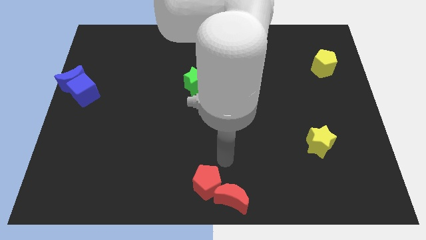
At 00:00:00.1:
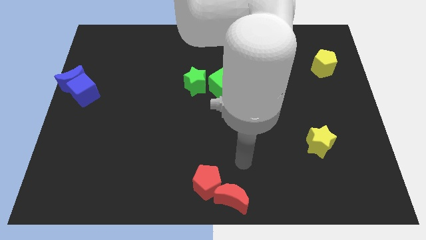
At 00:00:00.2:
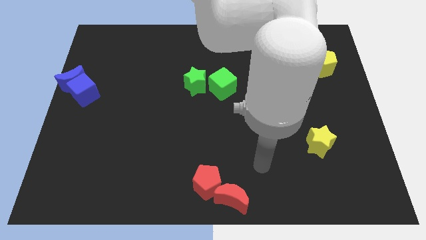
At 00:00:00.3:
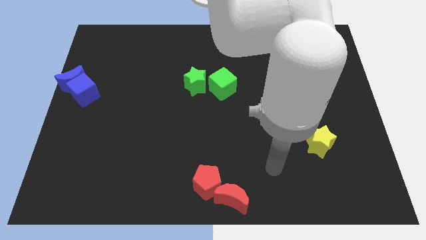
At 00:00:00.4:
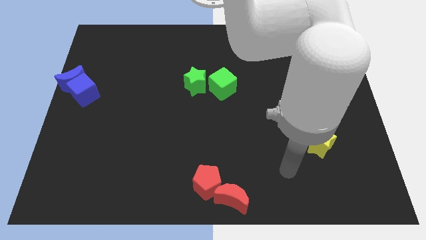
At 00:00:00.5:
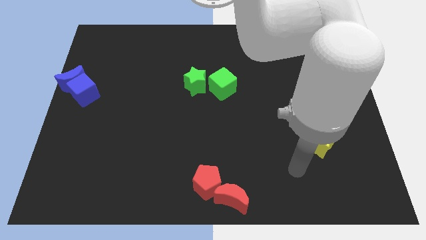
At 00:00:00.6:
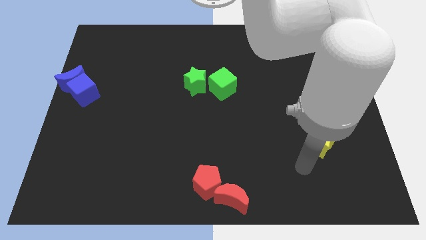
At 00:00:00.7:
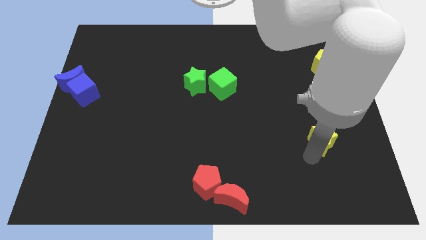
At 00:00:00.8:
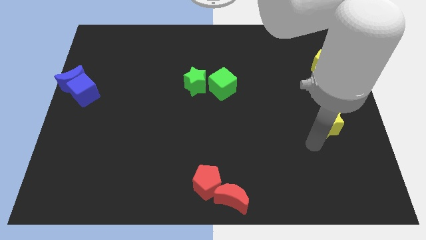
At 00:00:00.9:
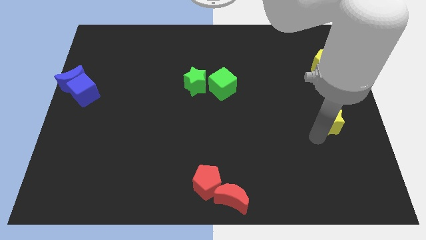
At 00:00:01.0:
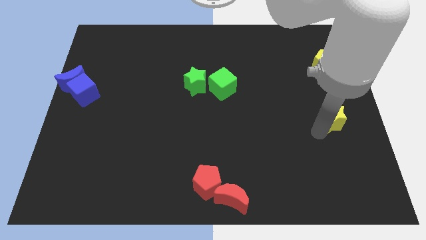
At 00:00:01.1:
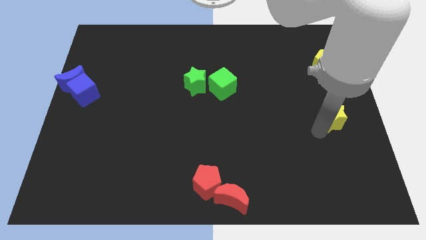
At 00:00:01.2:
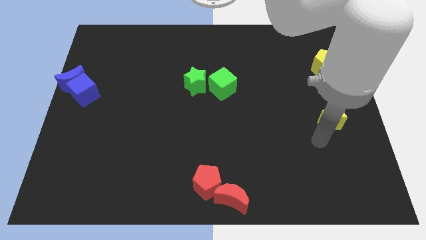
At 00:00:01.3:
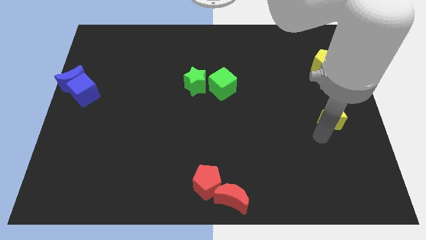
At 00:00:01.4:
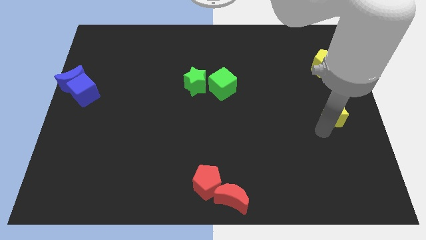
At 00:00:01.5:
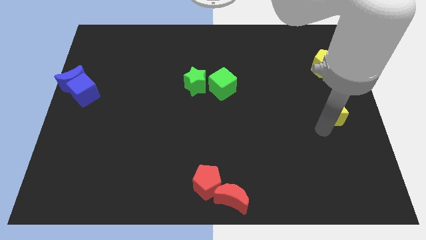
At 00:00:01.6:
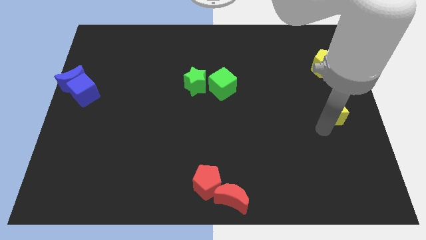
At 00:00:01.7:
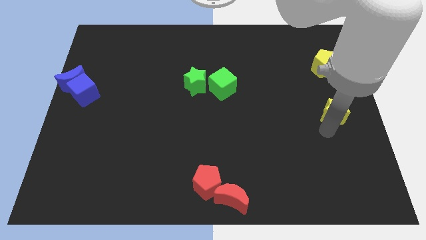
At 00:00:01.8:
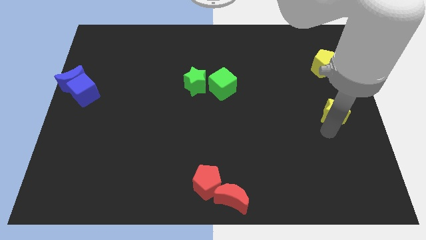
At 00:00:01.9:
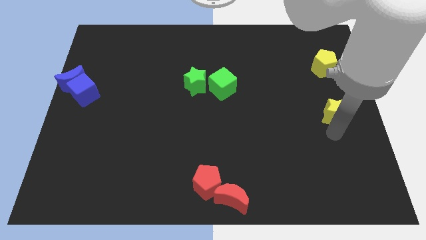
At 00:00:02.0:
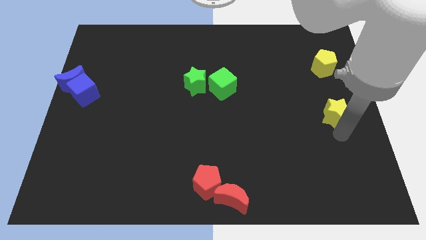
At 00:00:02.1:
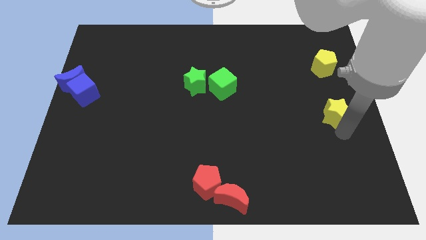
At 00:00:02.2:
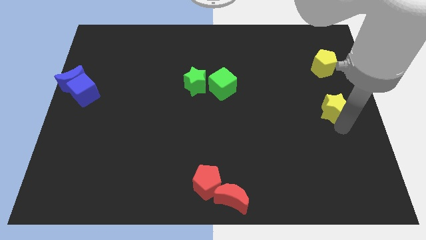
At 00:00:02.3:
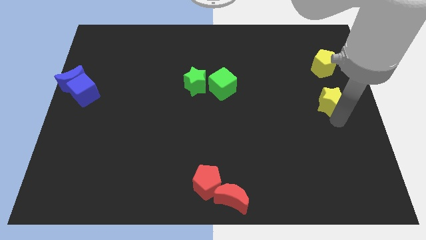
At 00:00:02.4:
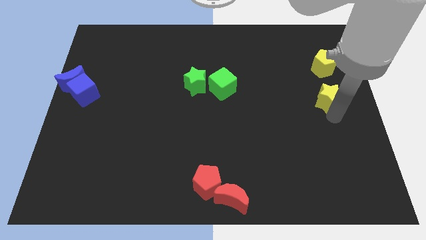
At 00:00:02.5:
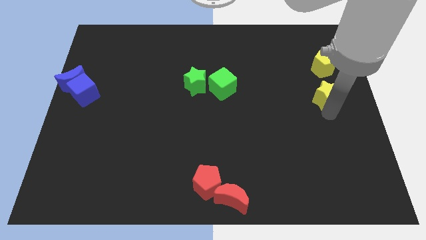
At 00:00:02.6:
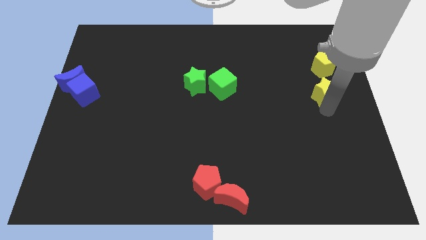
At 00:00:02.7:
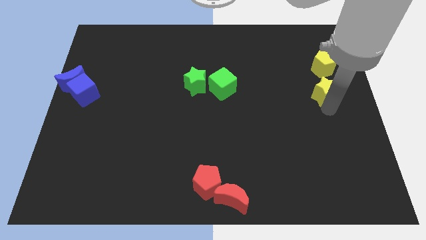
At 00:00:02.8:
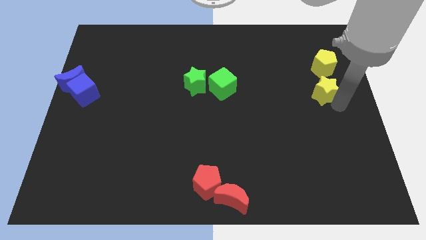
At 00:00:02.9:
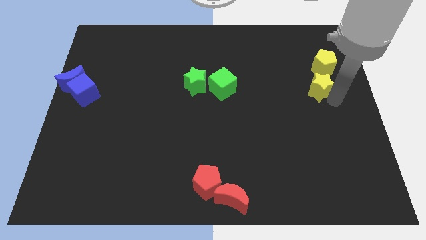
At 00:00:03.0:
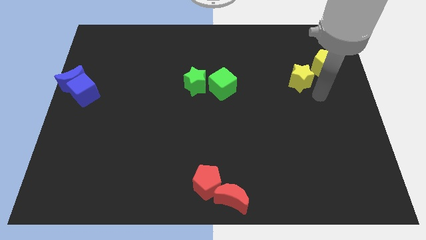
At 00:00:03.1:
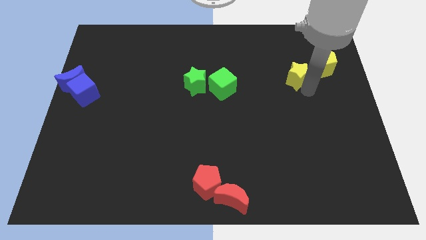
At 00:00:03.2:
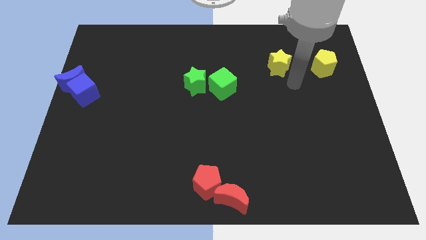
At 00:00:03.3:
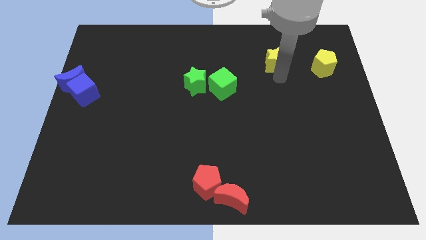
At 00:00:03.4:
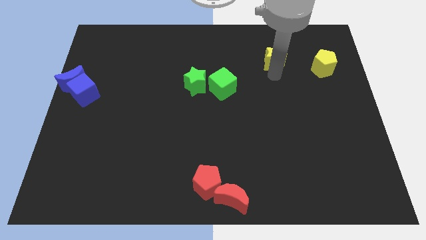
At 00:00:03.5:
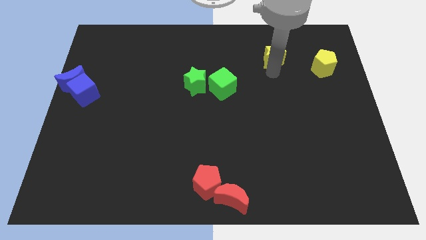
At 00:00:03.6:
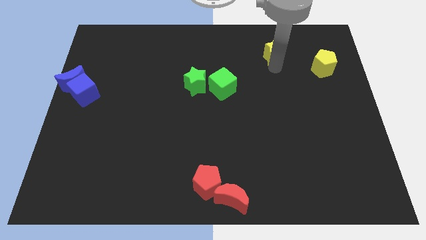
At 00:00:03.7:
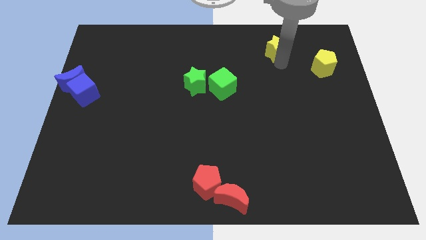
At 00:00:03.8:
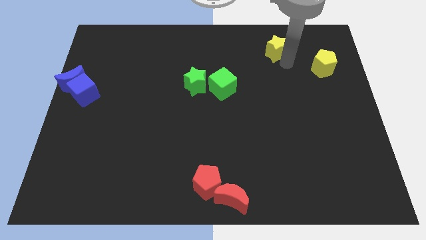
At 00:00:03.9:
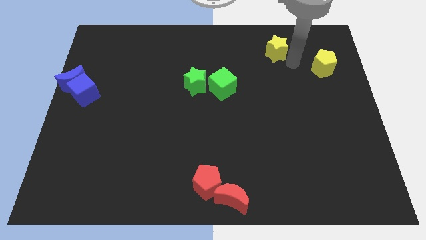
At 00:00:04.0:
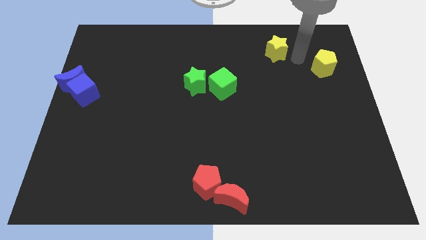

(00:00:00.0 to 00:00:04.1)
move the yellow star towards the yellow pentagon

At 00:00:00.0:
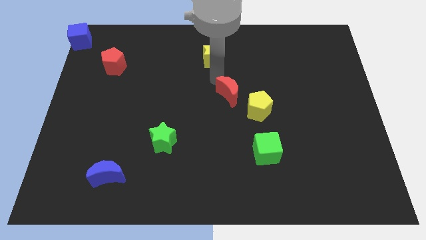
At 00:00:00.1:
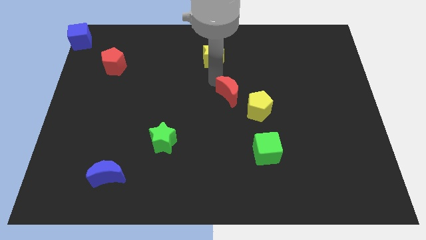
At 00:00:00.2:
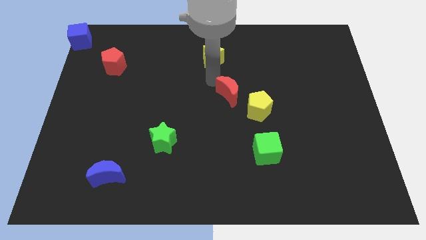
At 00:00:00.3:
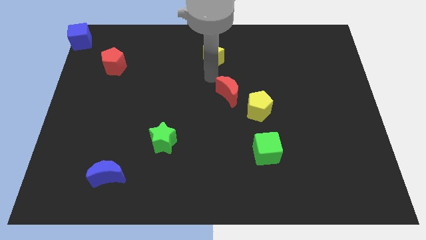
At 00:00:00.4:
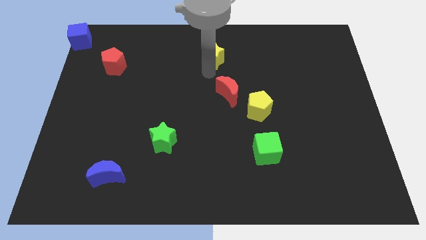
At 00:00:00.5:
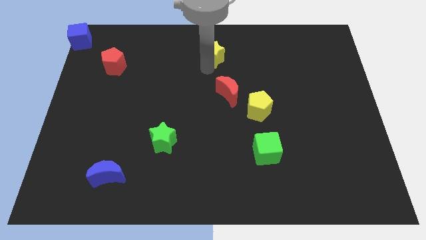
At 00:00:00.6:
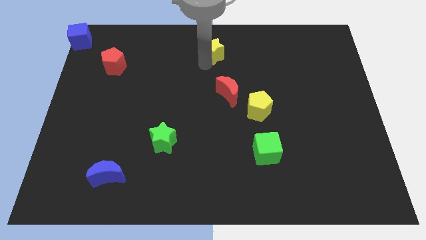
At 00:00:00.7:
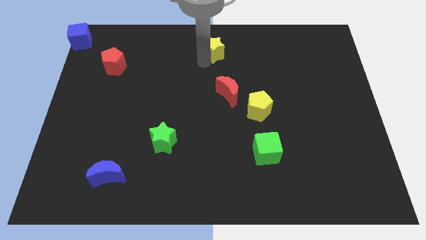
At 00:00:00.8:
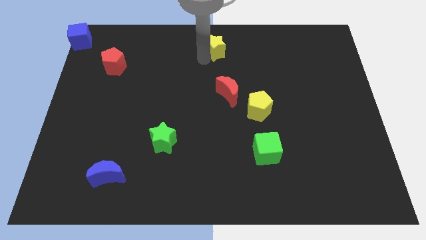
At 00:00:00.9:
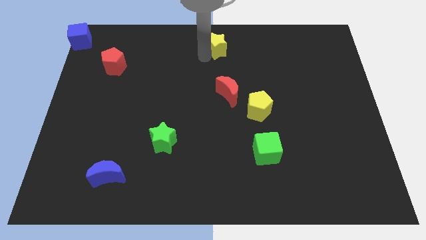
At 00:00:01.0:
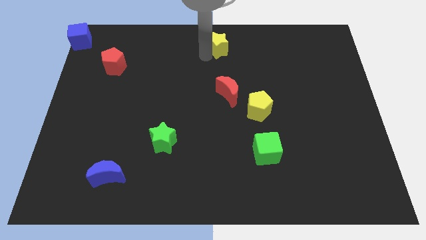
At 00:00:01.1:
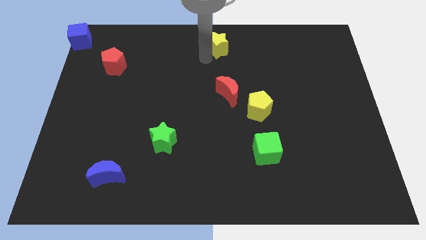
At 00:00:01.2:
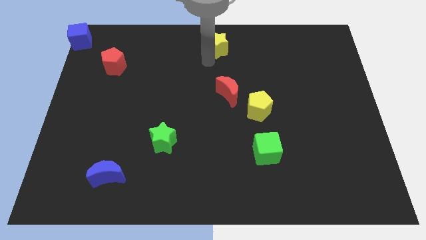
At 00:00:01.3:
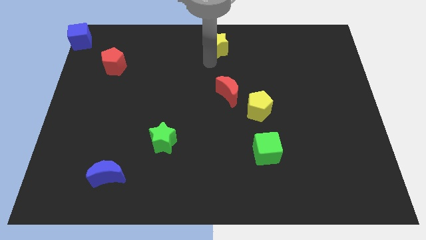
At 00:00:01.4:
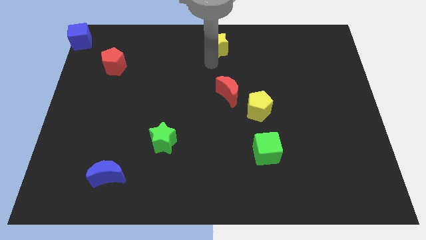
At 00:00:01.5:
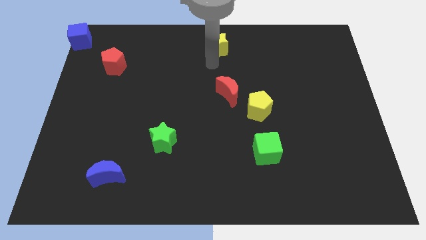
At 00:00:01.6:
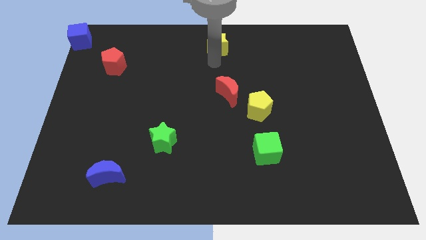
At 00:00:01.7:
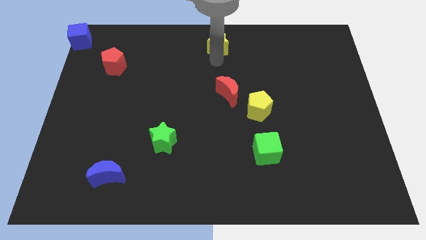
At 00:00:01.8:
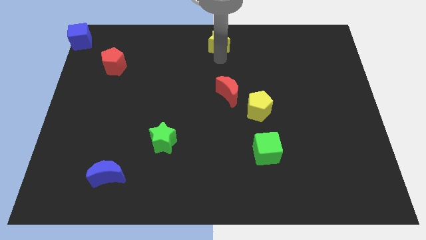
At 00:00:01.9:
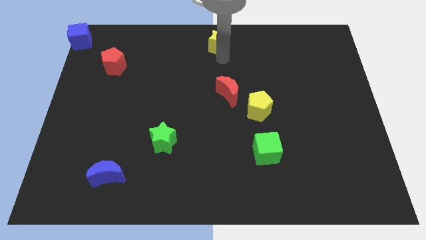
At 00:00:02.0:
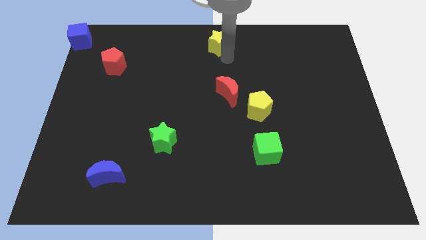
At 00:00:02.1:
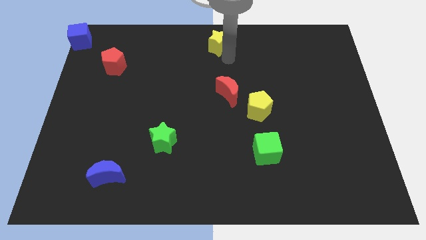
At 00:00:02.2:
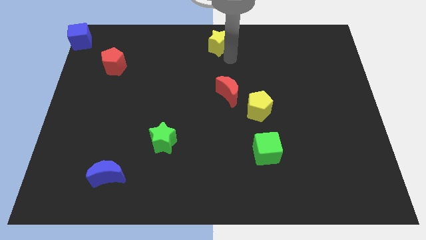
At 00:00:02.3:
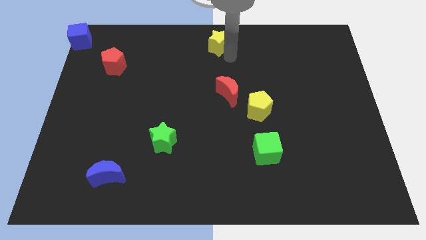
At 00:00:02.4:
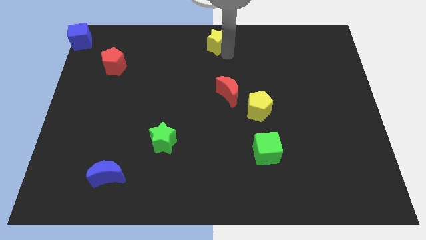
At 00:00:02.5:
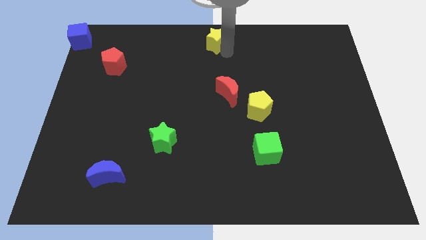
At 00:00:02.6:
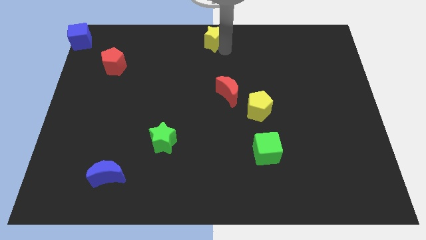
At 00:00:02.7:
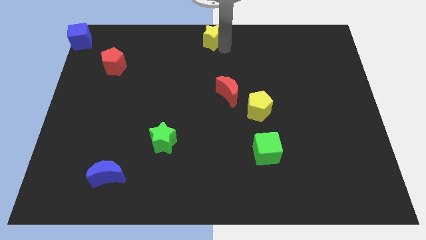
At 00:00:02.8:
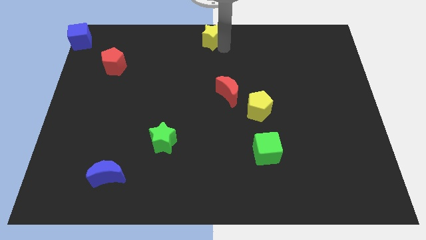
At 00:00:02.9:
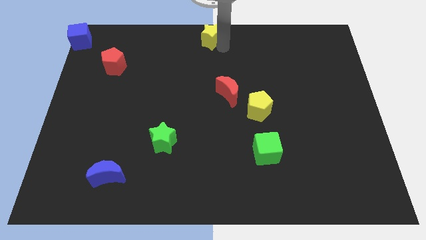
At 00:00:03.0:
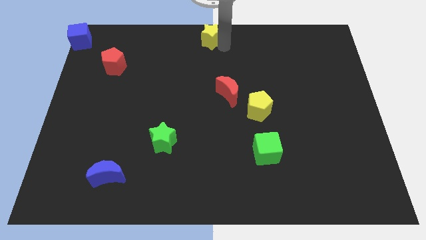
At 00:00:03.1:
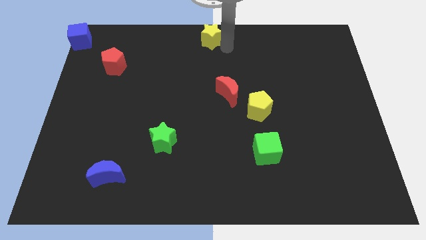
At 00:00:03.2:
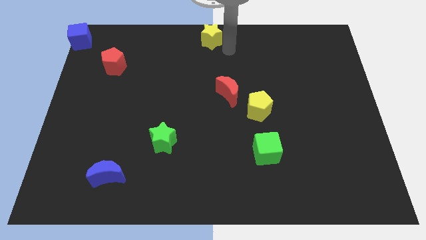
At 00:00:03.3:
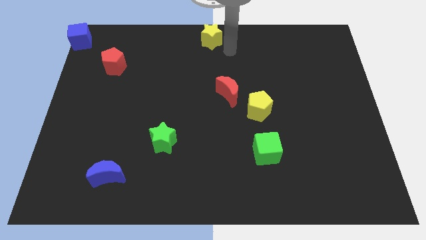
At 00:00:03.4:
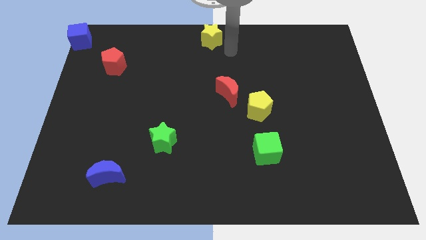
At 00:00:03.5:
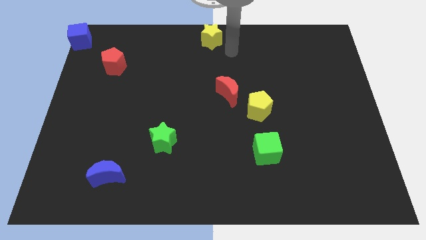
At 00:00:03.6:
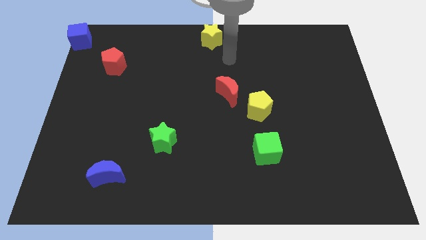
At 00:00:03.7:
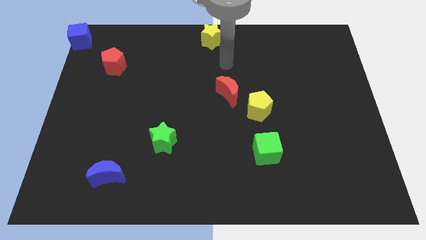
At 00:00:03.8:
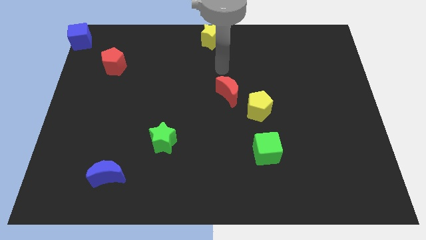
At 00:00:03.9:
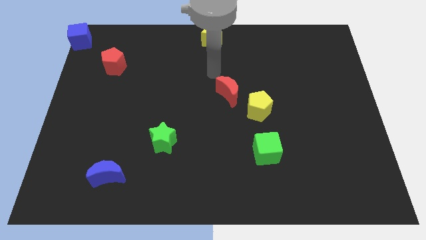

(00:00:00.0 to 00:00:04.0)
move yellow star to the top centre of the board

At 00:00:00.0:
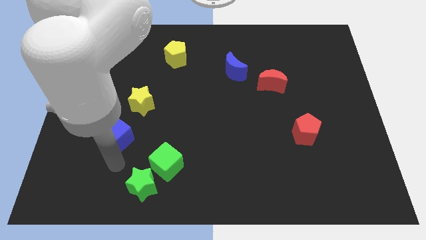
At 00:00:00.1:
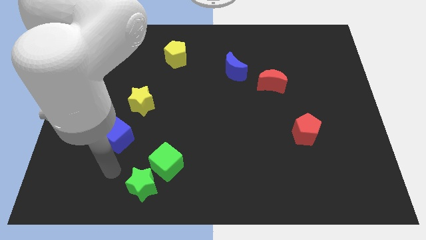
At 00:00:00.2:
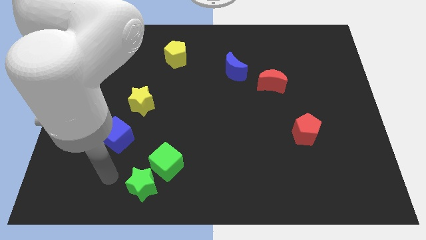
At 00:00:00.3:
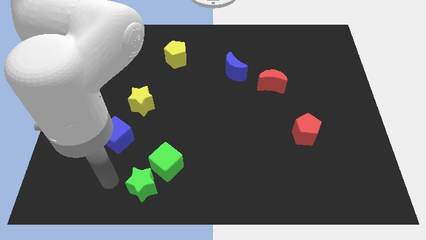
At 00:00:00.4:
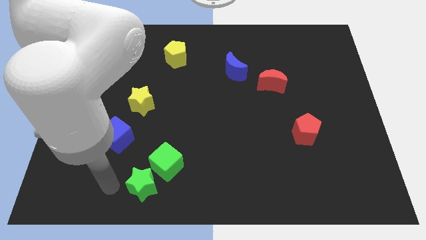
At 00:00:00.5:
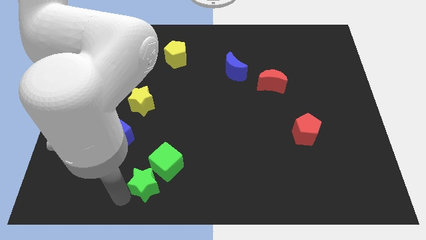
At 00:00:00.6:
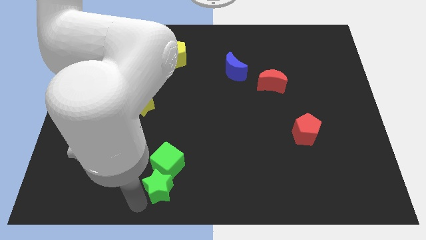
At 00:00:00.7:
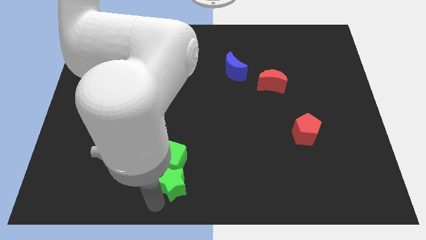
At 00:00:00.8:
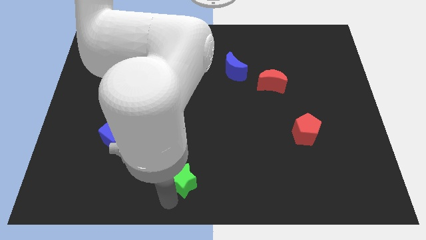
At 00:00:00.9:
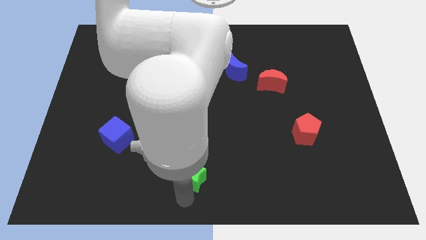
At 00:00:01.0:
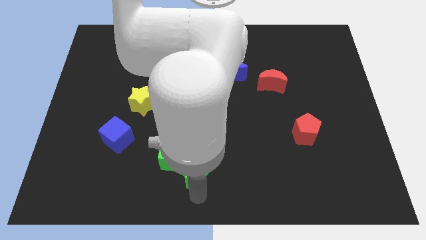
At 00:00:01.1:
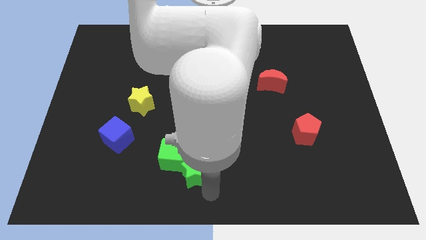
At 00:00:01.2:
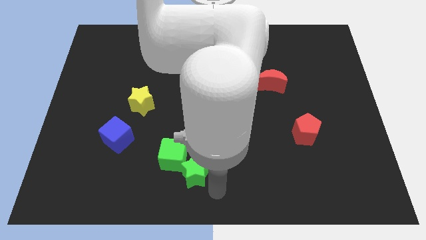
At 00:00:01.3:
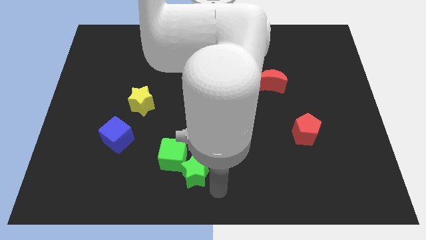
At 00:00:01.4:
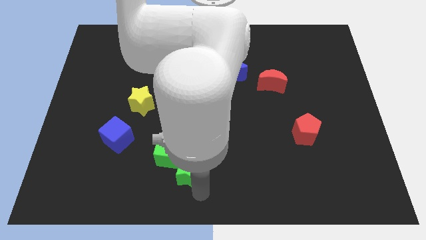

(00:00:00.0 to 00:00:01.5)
move the green star to the right of the green cube
